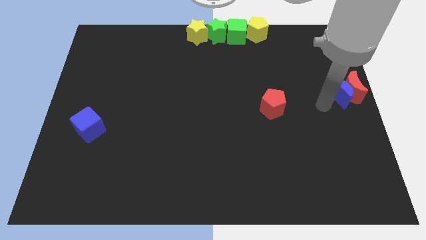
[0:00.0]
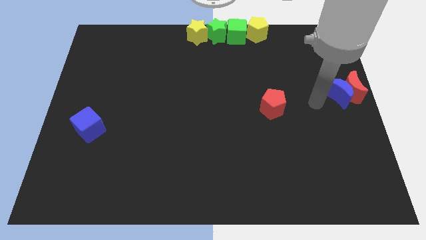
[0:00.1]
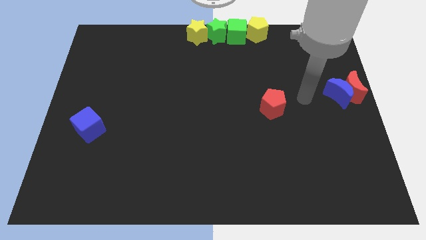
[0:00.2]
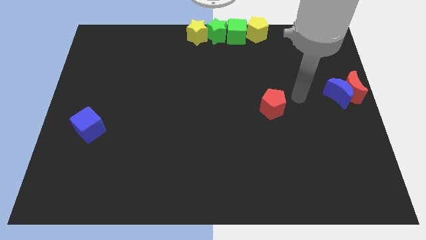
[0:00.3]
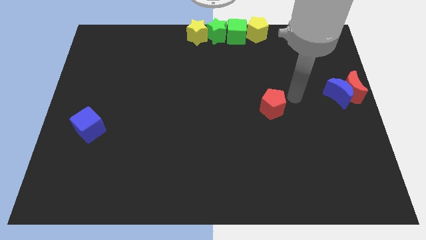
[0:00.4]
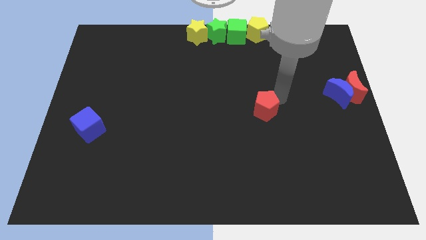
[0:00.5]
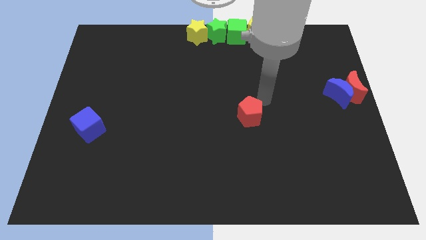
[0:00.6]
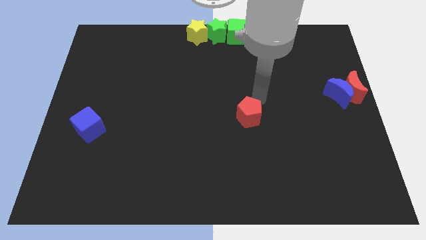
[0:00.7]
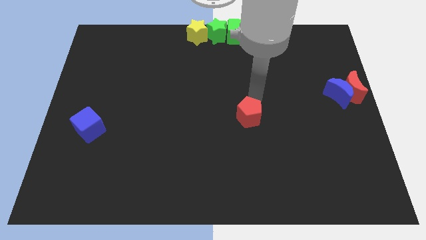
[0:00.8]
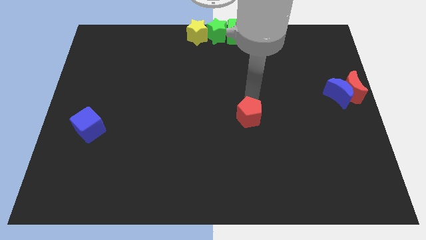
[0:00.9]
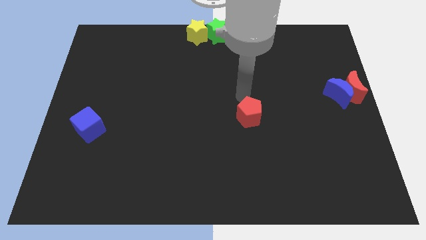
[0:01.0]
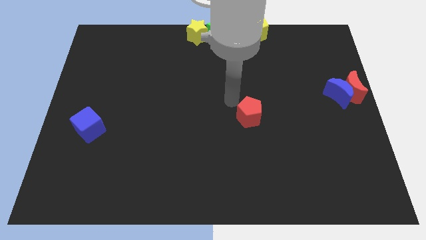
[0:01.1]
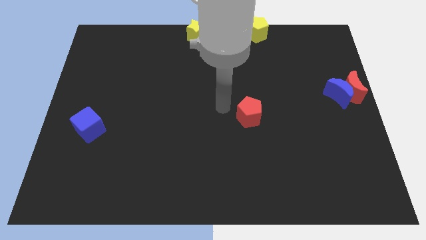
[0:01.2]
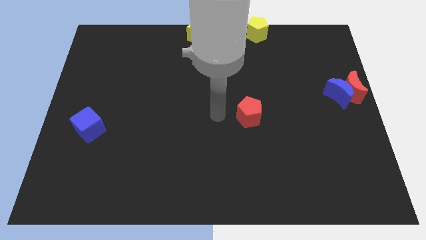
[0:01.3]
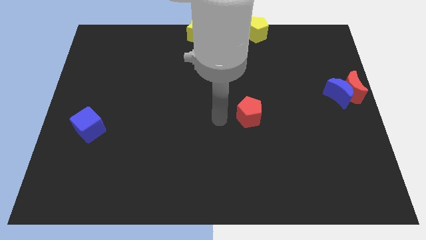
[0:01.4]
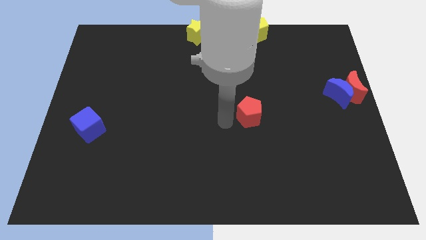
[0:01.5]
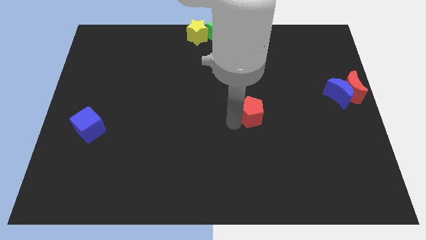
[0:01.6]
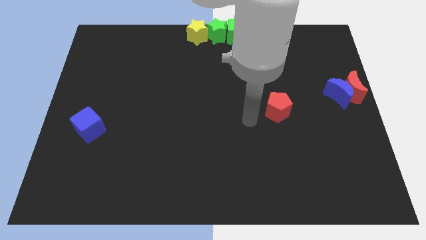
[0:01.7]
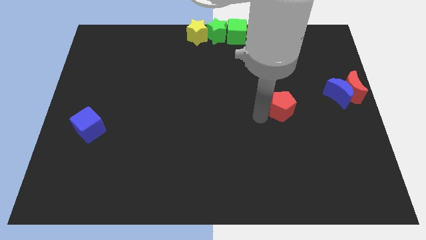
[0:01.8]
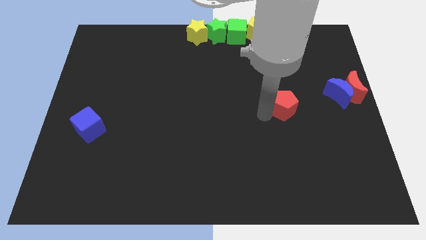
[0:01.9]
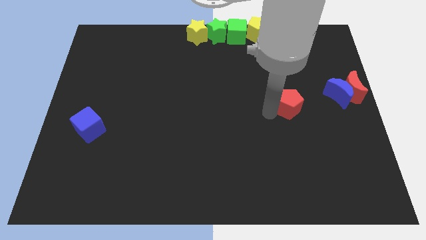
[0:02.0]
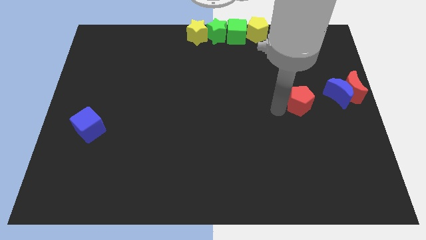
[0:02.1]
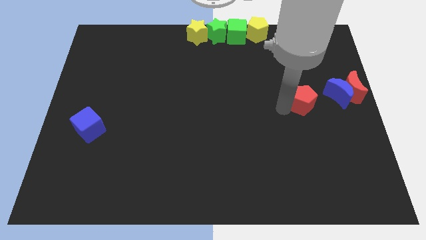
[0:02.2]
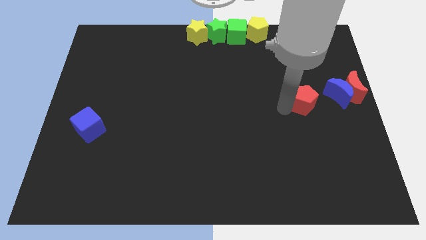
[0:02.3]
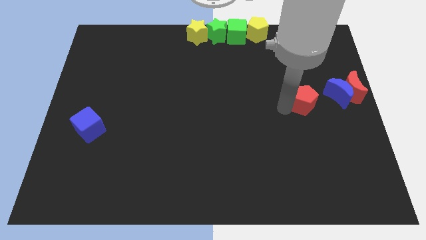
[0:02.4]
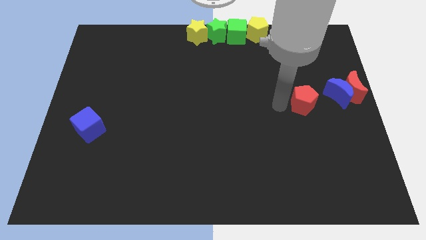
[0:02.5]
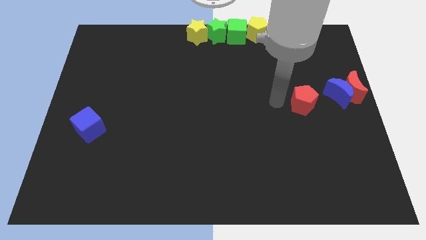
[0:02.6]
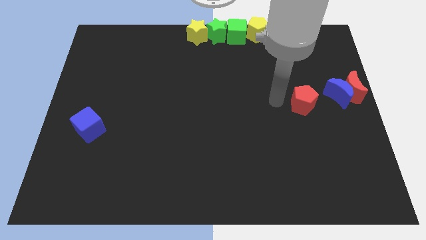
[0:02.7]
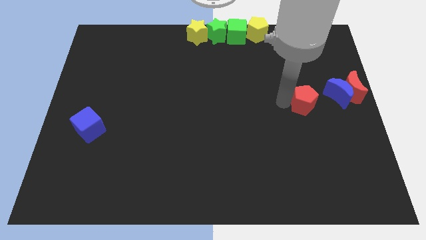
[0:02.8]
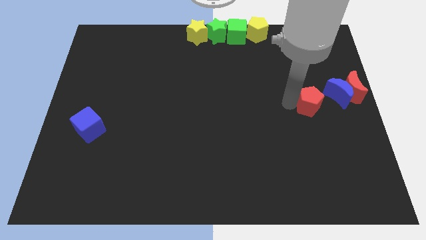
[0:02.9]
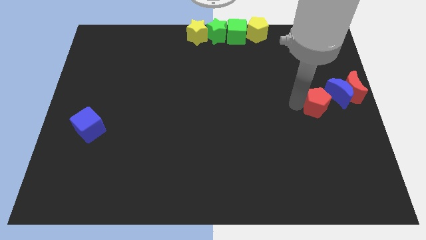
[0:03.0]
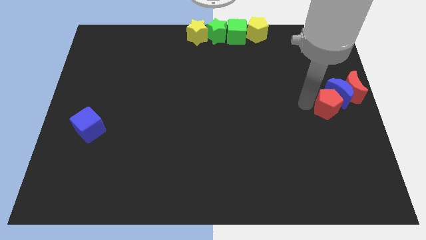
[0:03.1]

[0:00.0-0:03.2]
move the red pentagon towards the blue crescent

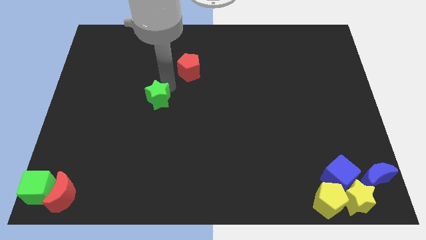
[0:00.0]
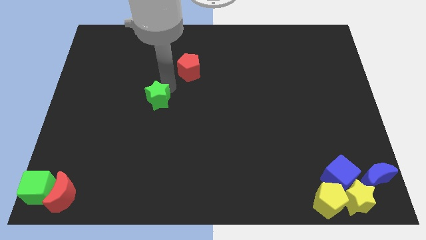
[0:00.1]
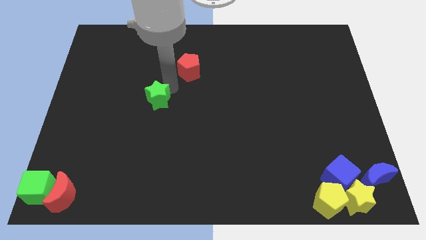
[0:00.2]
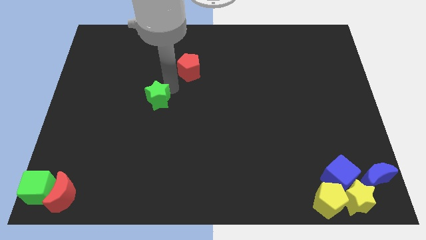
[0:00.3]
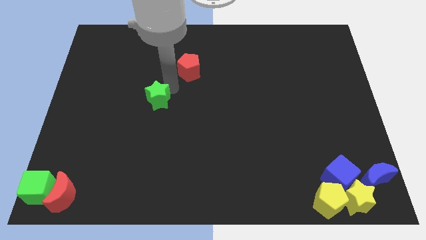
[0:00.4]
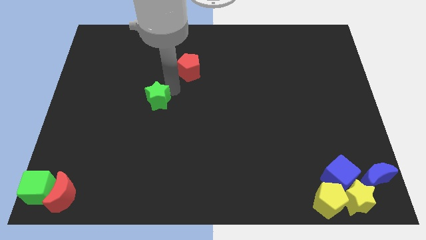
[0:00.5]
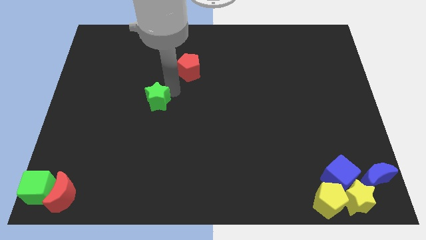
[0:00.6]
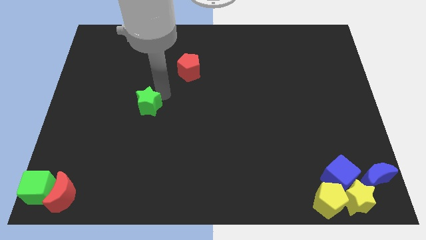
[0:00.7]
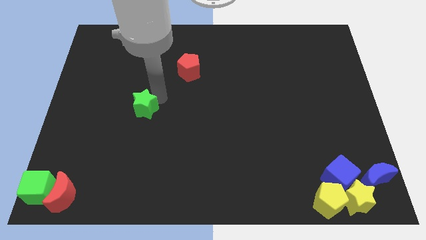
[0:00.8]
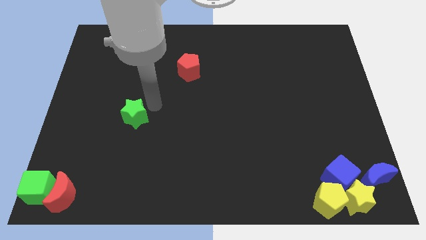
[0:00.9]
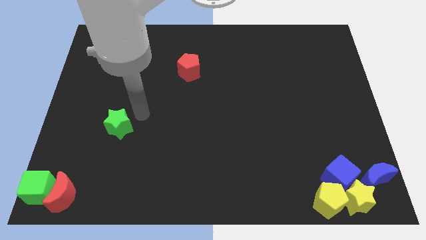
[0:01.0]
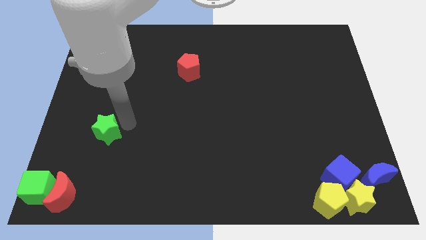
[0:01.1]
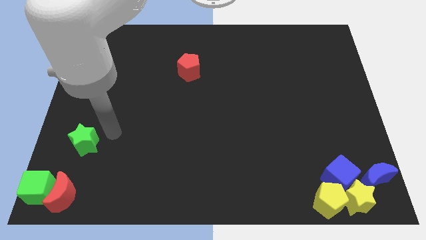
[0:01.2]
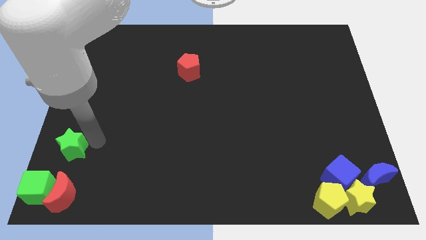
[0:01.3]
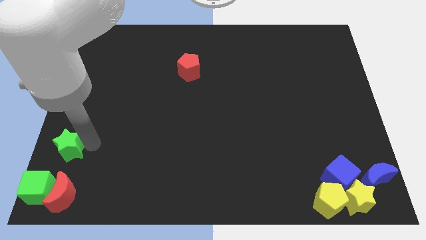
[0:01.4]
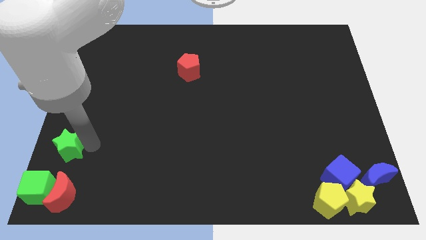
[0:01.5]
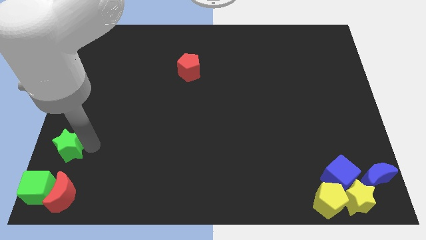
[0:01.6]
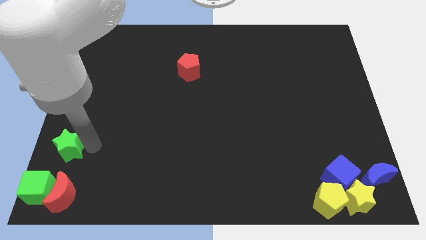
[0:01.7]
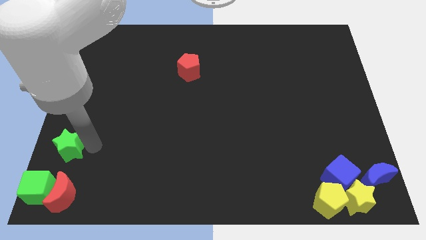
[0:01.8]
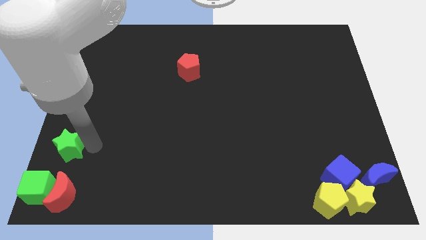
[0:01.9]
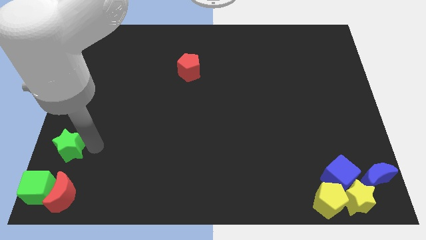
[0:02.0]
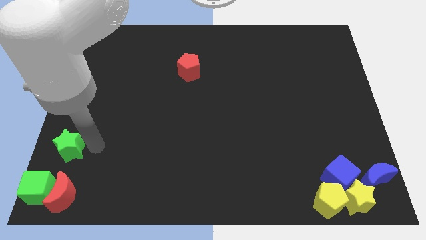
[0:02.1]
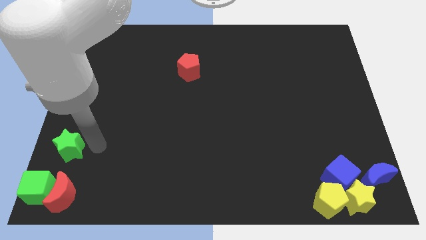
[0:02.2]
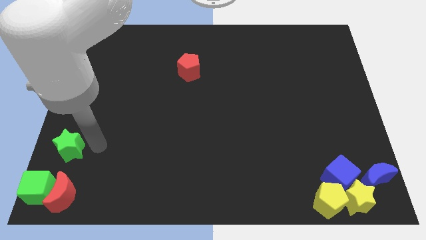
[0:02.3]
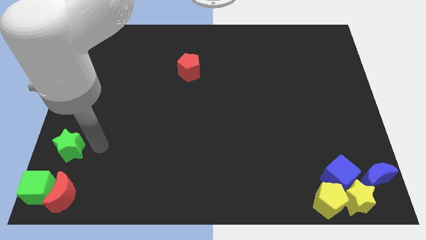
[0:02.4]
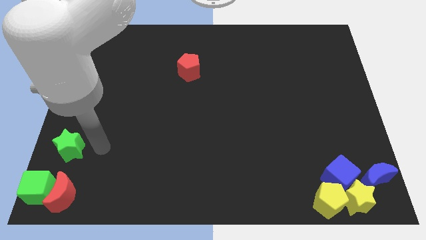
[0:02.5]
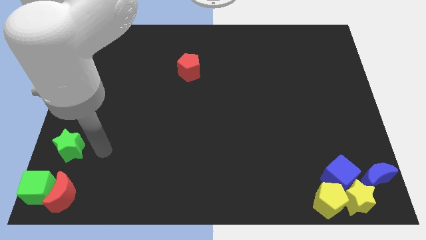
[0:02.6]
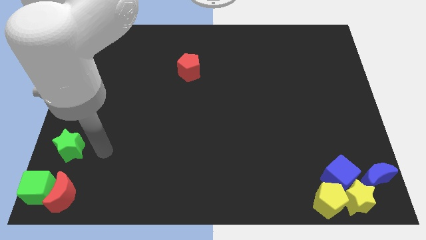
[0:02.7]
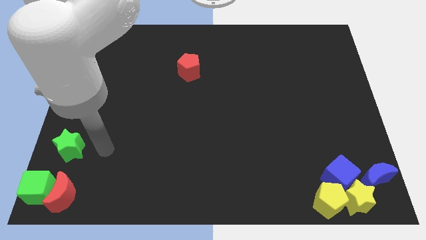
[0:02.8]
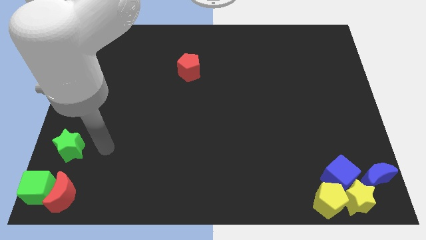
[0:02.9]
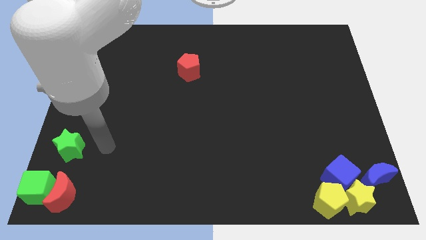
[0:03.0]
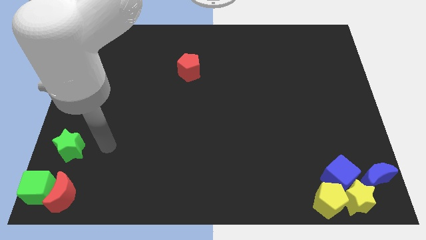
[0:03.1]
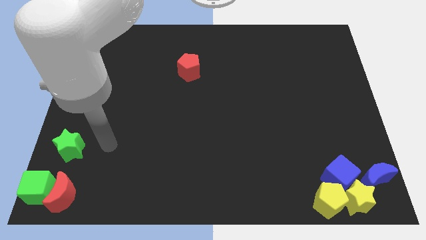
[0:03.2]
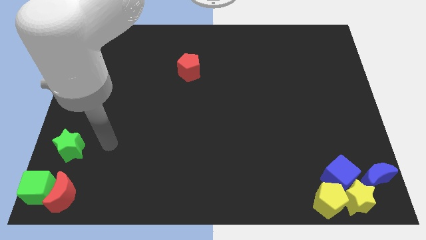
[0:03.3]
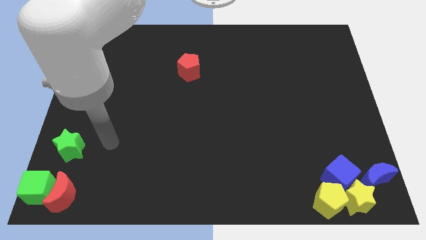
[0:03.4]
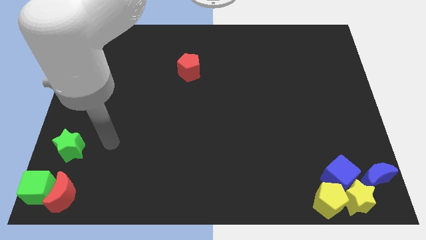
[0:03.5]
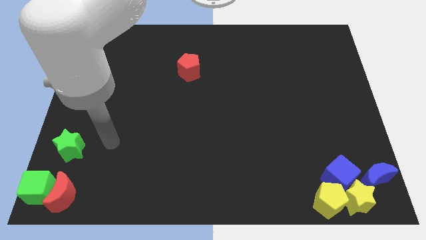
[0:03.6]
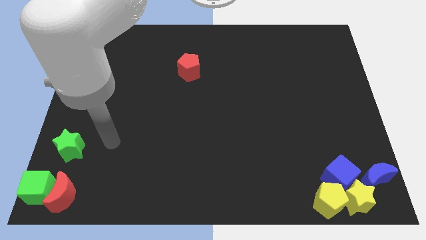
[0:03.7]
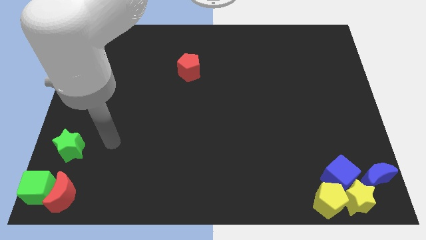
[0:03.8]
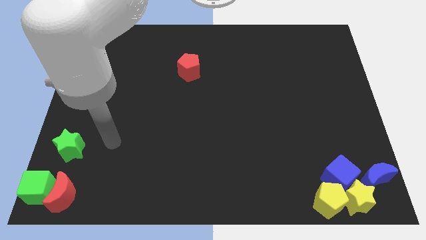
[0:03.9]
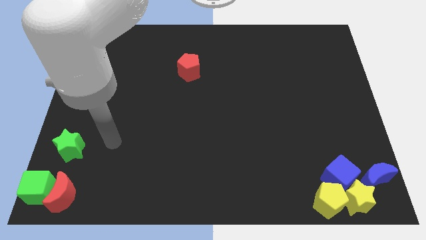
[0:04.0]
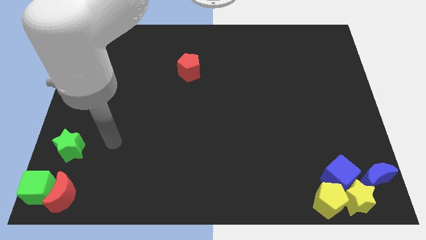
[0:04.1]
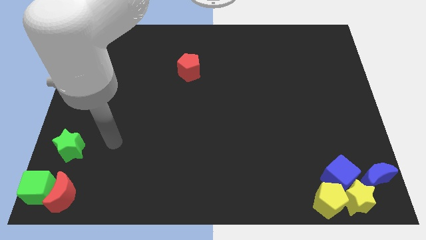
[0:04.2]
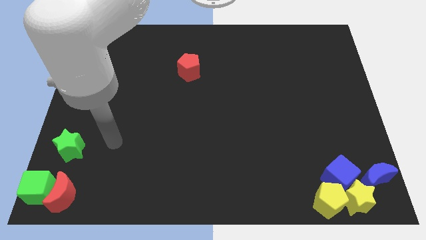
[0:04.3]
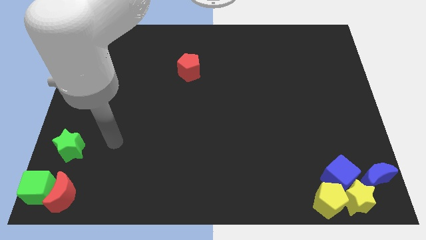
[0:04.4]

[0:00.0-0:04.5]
move green star towards green cube

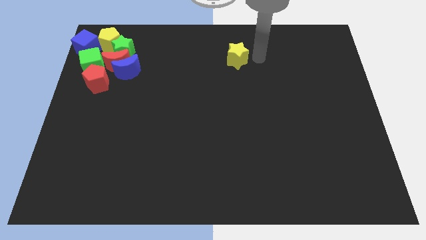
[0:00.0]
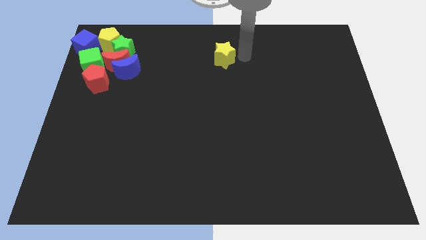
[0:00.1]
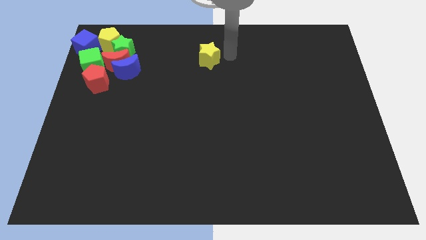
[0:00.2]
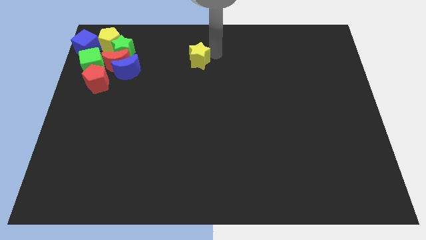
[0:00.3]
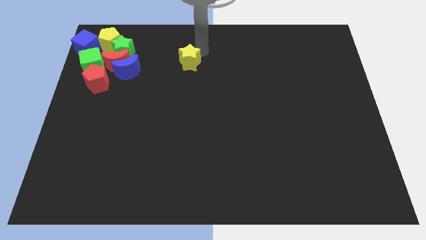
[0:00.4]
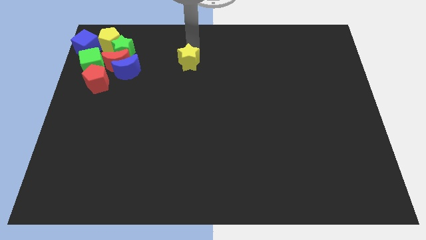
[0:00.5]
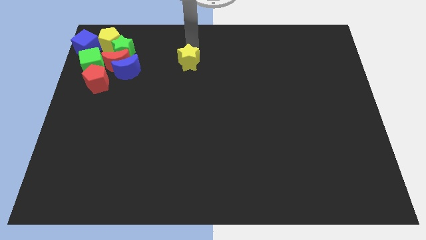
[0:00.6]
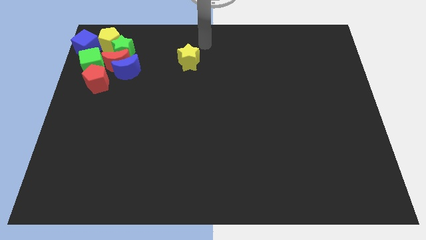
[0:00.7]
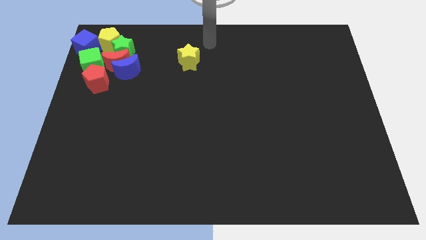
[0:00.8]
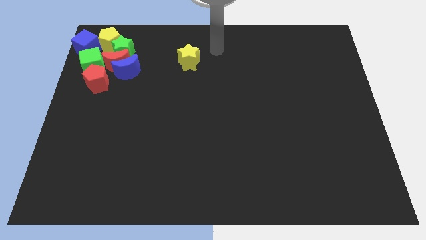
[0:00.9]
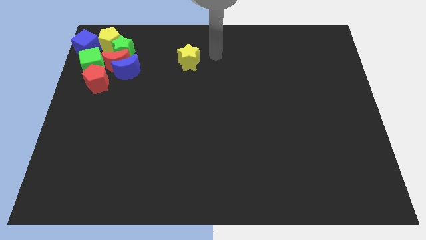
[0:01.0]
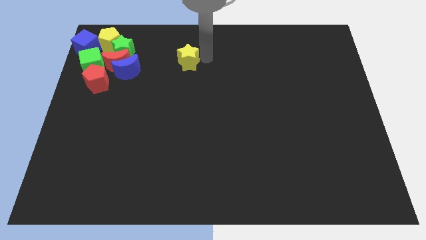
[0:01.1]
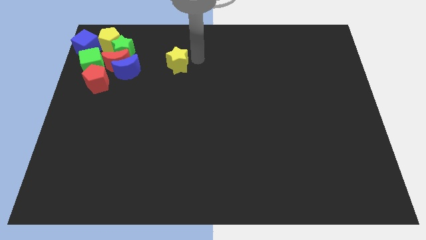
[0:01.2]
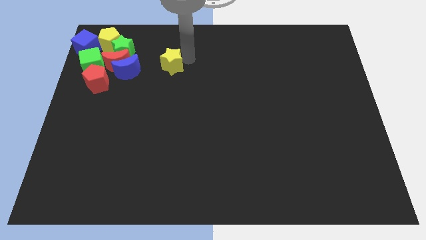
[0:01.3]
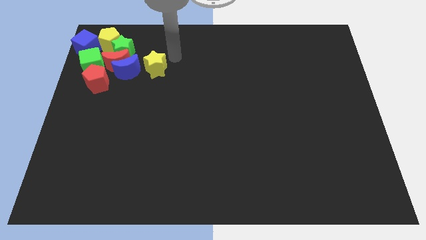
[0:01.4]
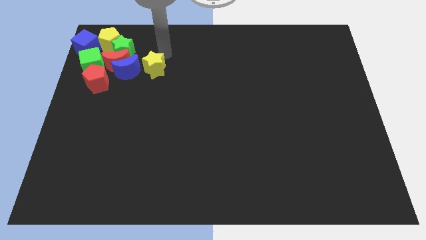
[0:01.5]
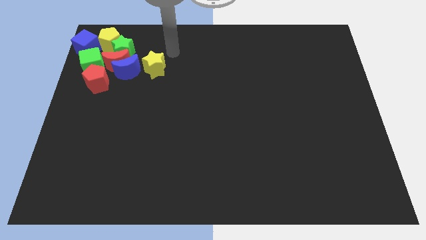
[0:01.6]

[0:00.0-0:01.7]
push the yellow star towards the left side of the board
